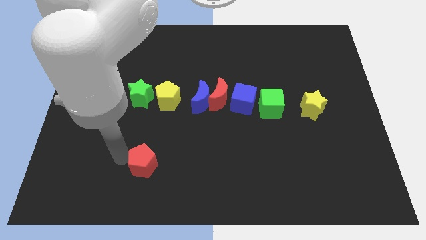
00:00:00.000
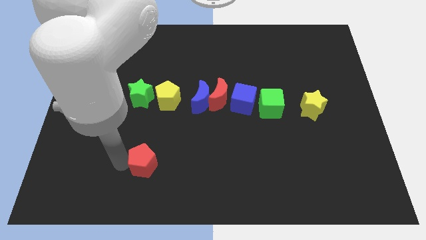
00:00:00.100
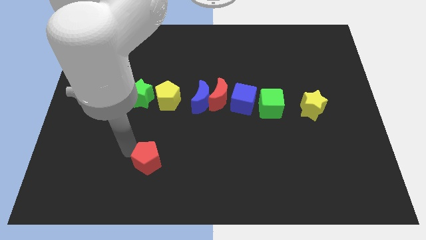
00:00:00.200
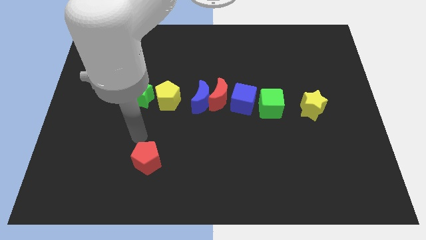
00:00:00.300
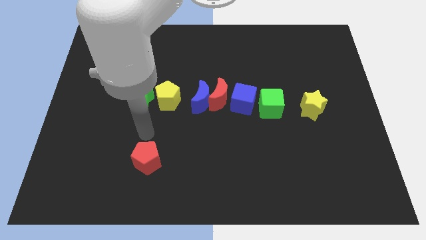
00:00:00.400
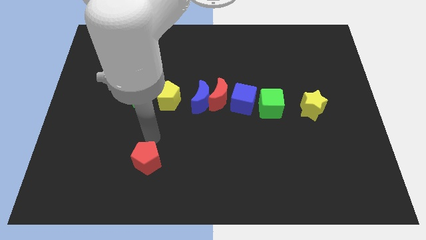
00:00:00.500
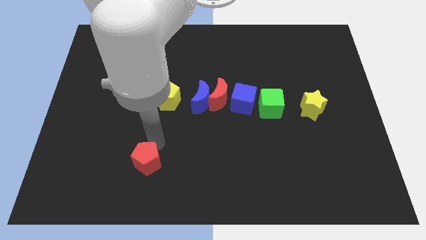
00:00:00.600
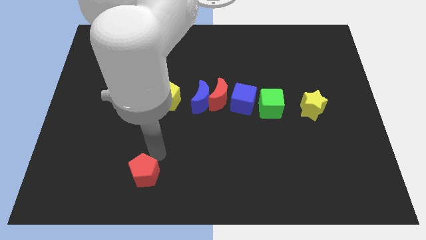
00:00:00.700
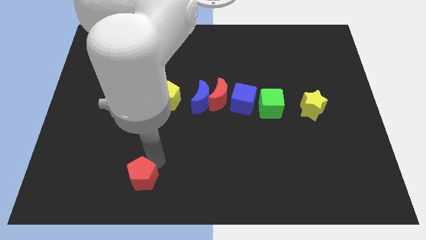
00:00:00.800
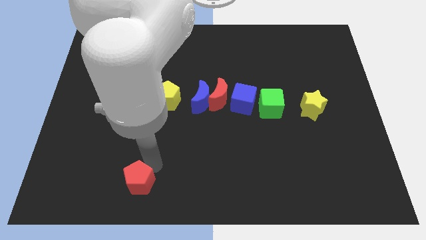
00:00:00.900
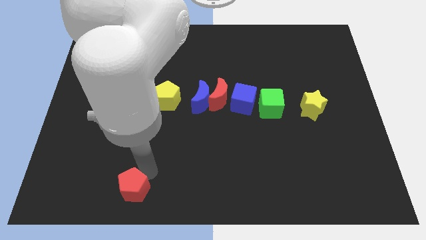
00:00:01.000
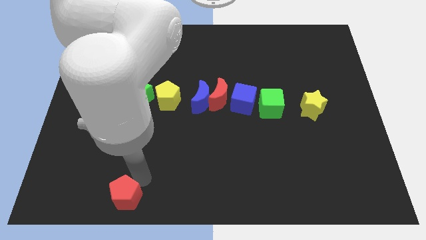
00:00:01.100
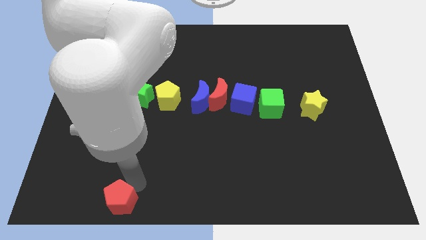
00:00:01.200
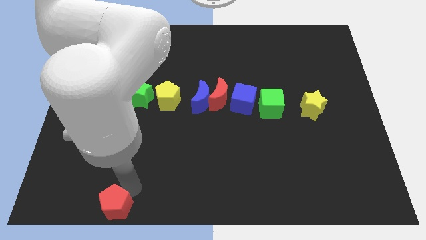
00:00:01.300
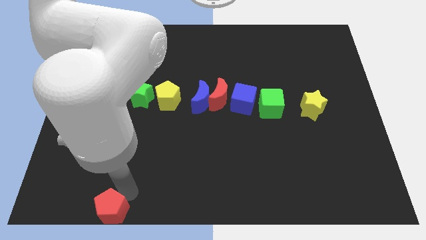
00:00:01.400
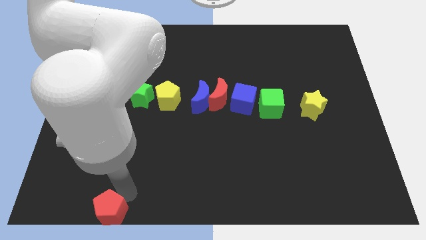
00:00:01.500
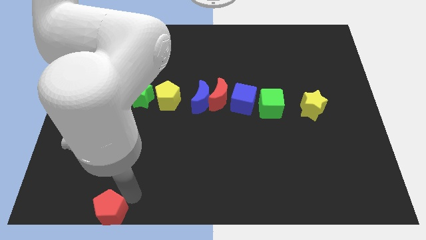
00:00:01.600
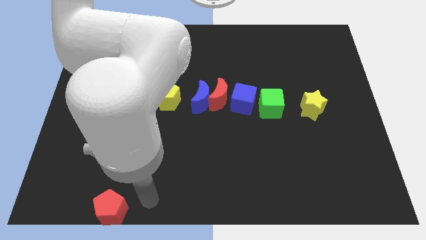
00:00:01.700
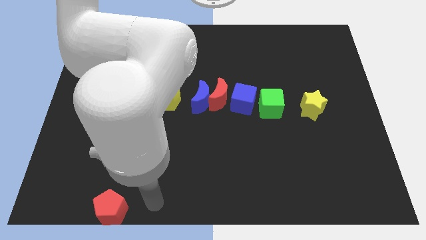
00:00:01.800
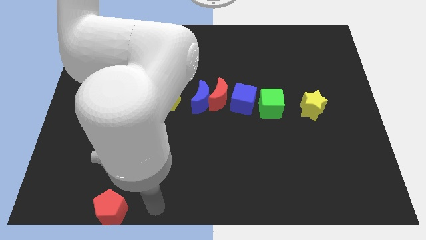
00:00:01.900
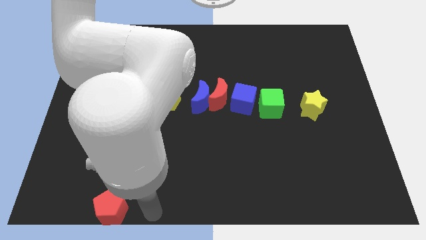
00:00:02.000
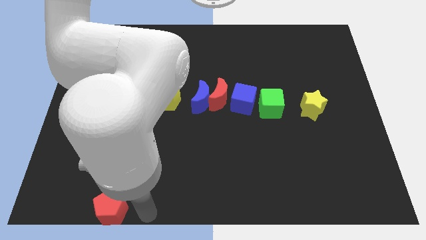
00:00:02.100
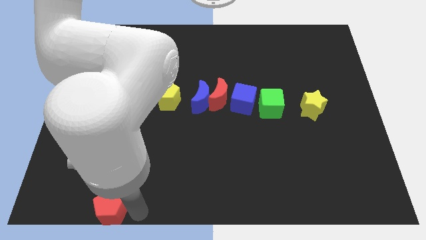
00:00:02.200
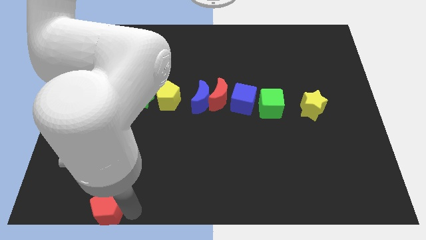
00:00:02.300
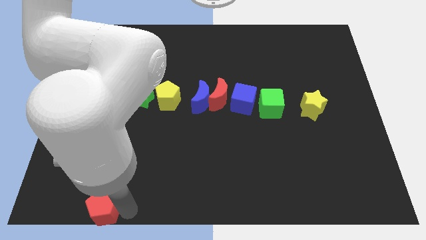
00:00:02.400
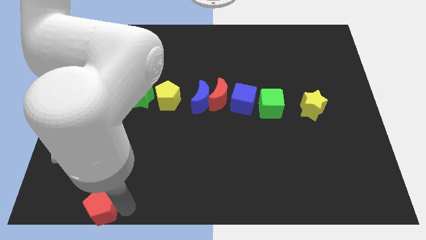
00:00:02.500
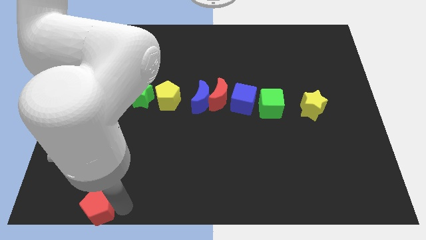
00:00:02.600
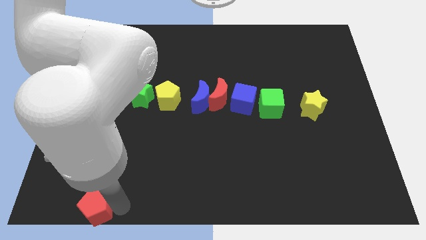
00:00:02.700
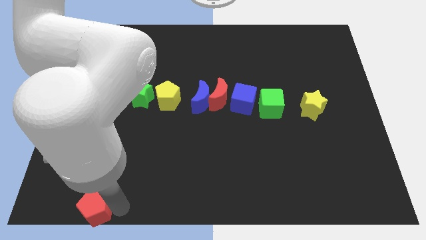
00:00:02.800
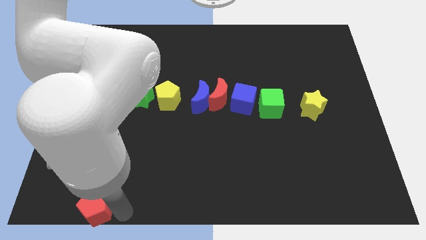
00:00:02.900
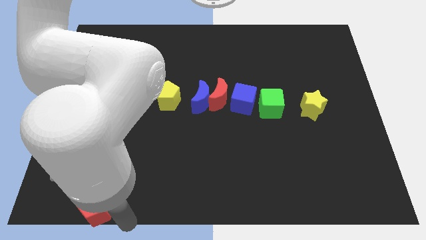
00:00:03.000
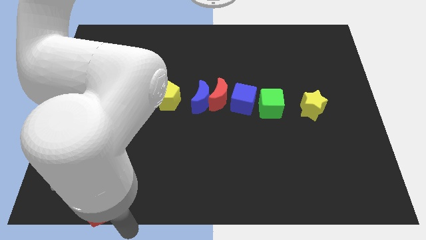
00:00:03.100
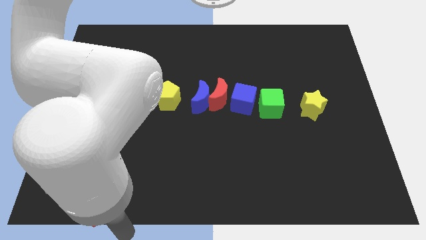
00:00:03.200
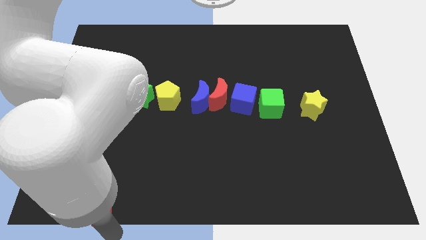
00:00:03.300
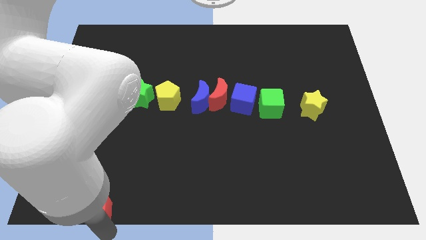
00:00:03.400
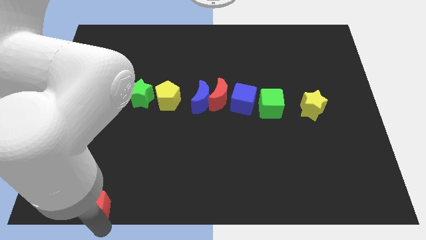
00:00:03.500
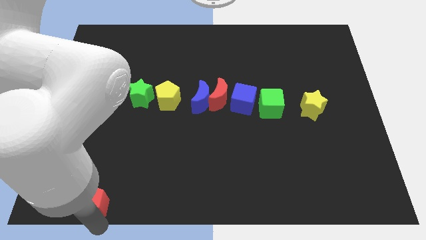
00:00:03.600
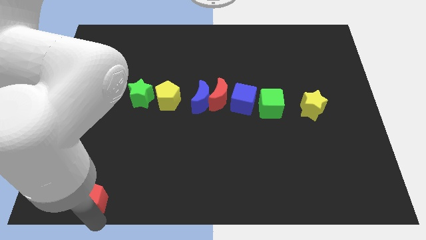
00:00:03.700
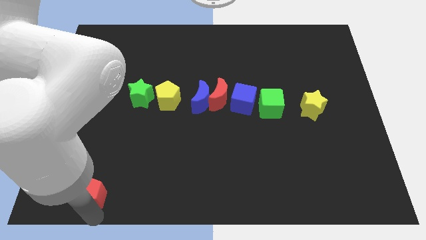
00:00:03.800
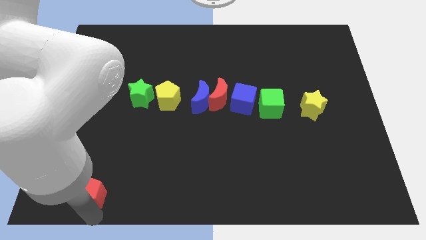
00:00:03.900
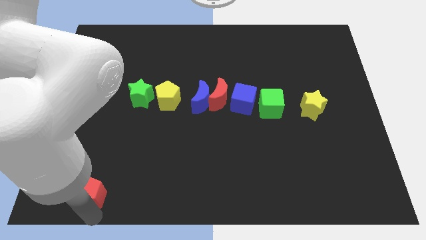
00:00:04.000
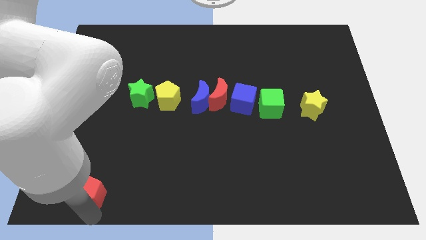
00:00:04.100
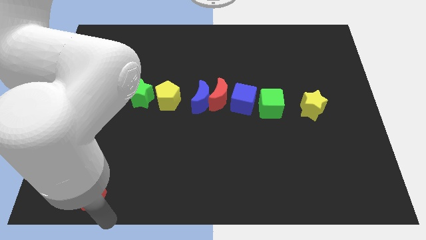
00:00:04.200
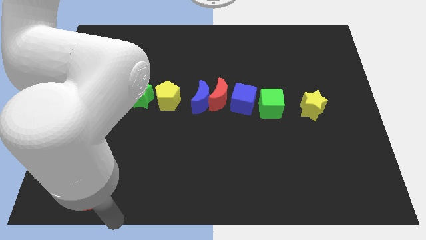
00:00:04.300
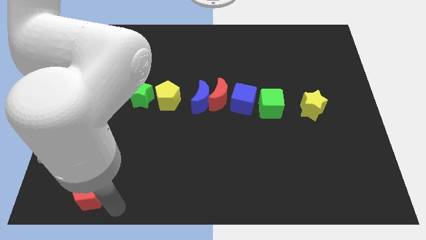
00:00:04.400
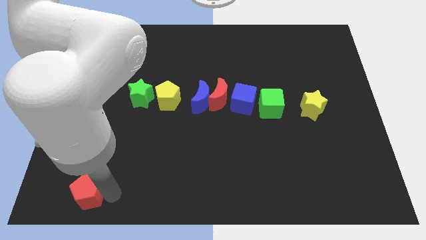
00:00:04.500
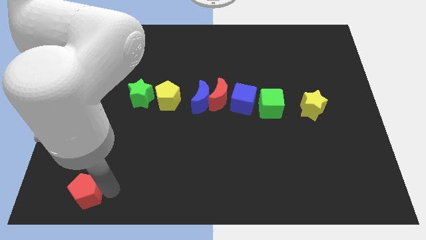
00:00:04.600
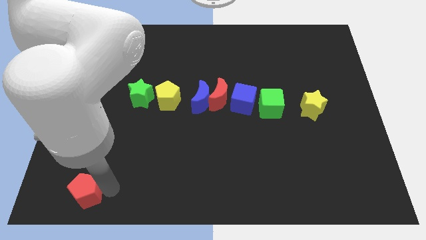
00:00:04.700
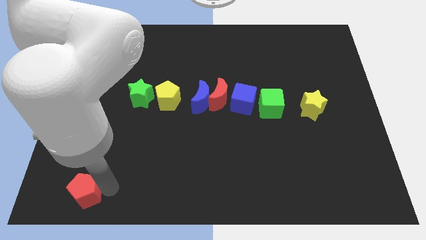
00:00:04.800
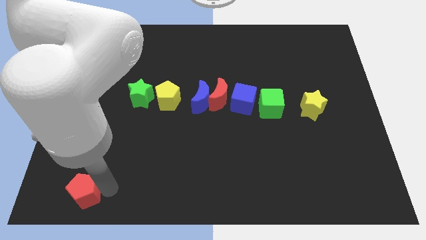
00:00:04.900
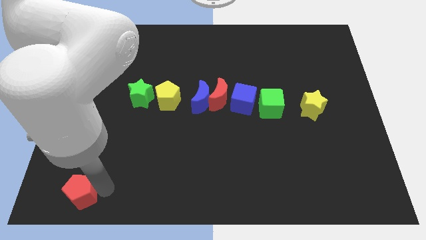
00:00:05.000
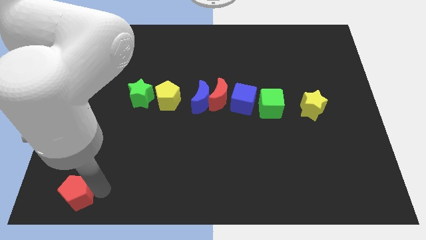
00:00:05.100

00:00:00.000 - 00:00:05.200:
move the red pentagon to the bottom left side

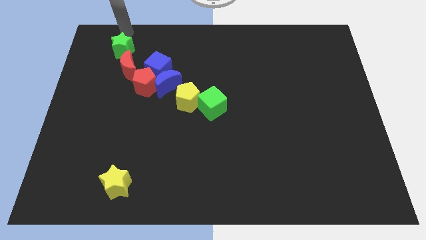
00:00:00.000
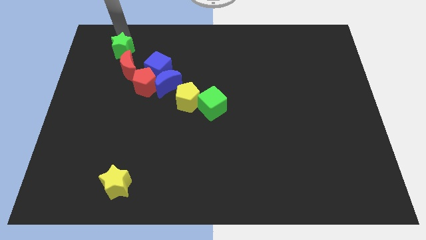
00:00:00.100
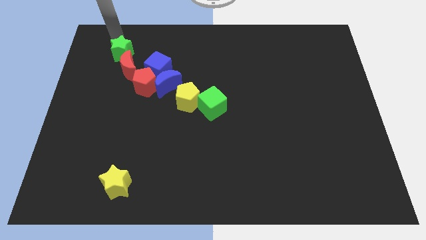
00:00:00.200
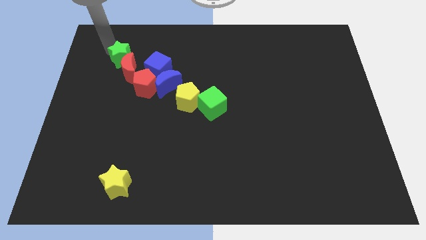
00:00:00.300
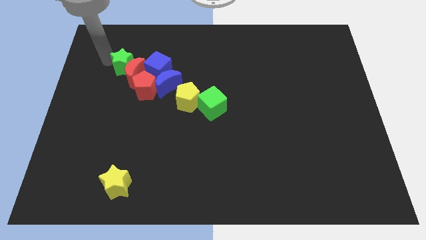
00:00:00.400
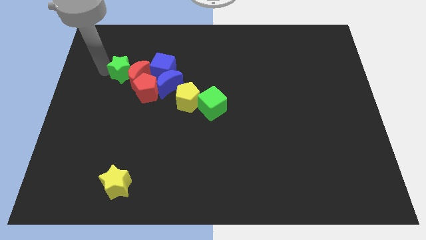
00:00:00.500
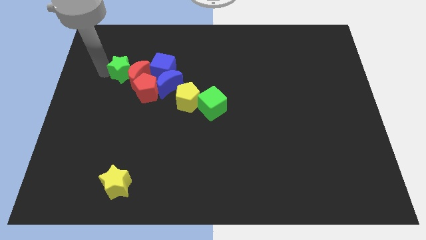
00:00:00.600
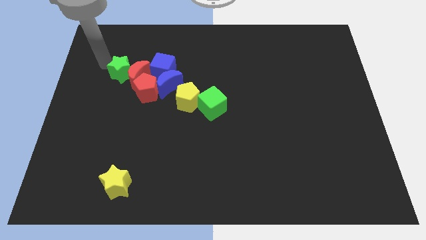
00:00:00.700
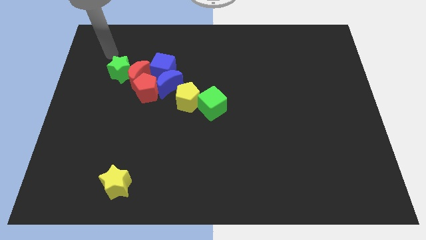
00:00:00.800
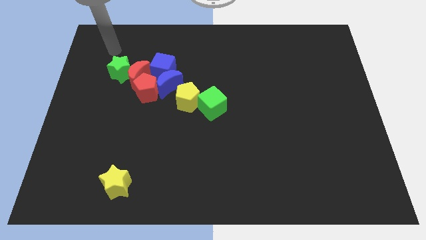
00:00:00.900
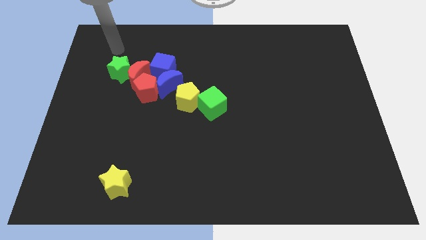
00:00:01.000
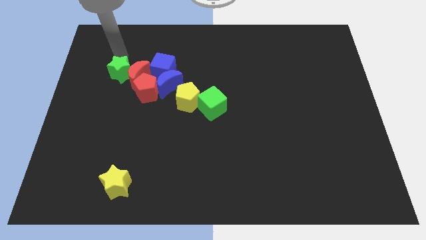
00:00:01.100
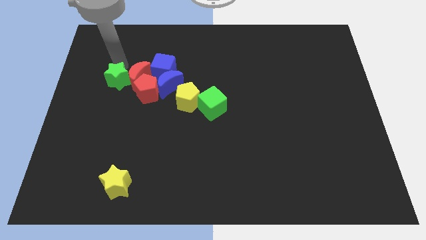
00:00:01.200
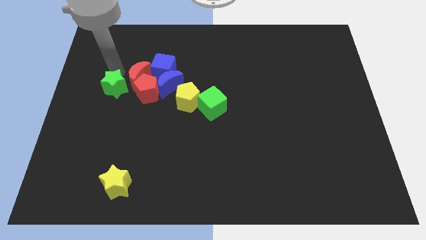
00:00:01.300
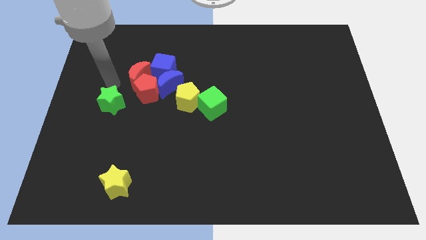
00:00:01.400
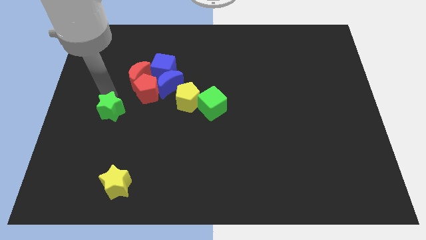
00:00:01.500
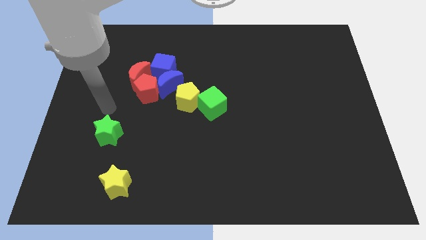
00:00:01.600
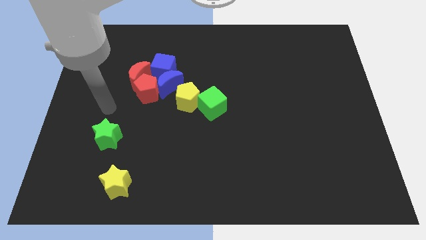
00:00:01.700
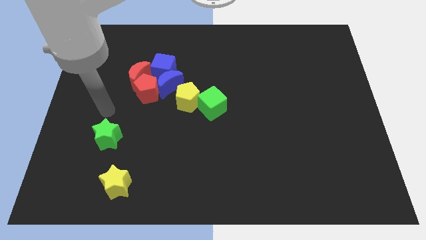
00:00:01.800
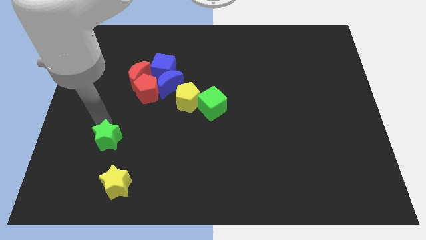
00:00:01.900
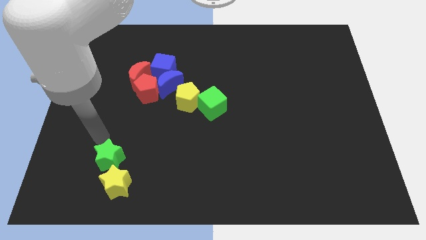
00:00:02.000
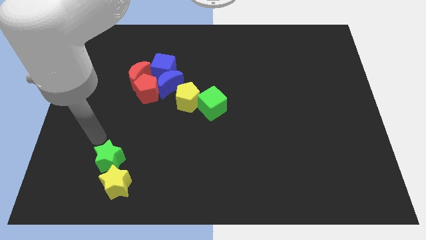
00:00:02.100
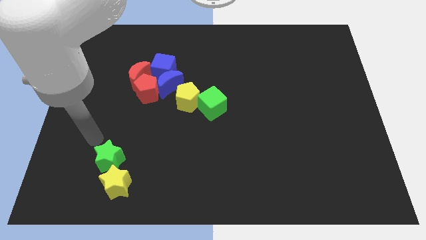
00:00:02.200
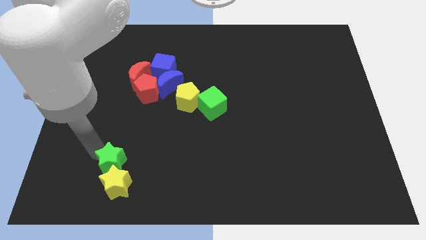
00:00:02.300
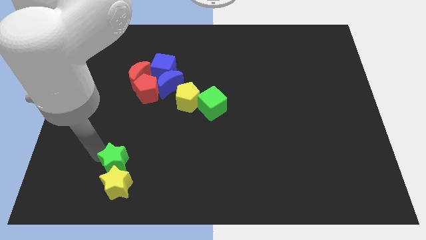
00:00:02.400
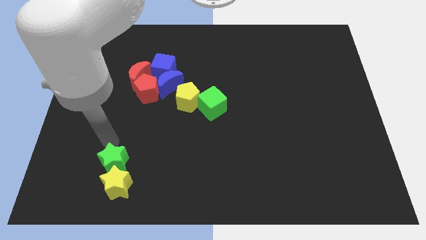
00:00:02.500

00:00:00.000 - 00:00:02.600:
push the green star to the top of the yellow star

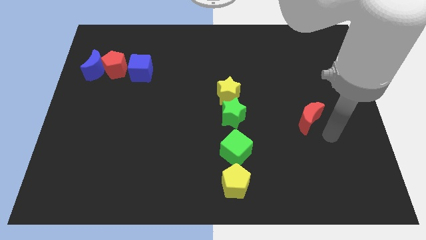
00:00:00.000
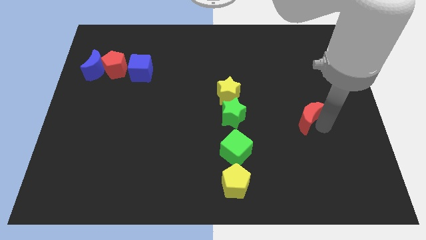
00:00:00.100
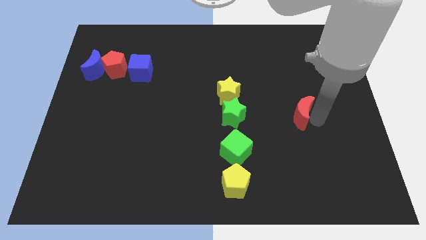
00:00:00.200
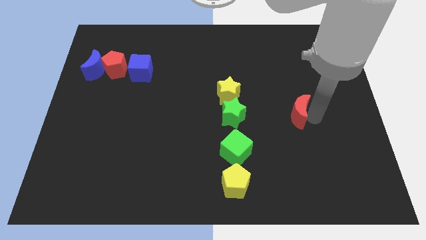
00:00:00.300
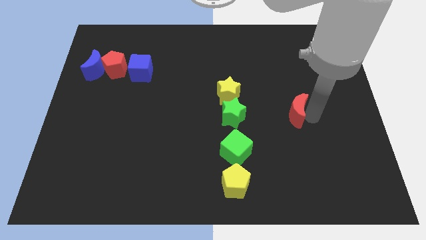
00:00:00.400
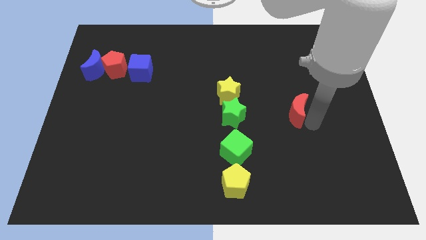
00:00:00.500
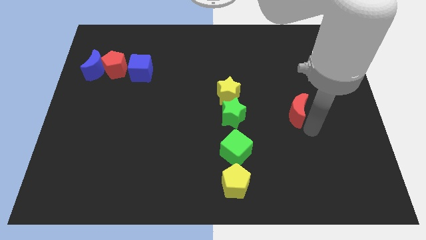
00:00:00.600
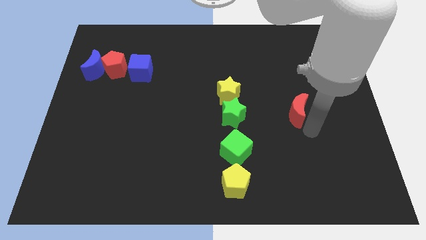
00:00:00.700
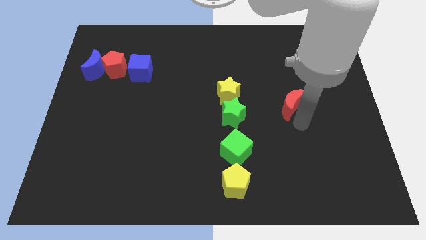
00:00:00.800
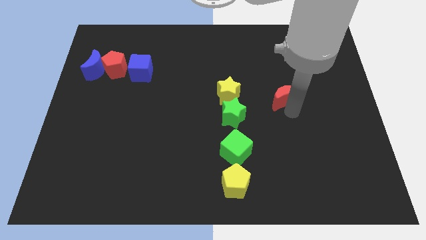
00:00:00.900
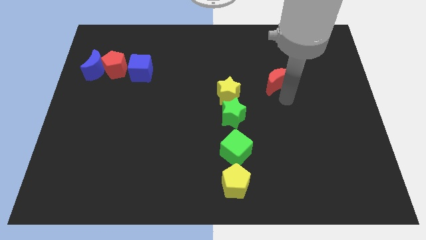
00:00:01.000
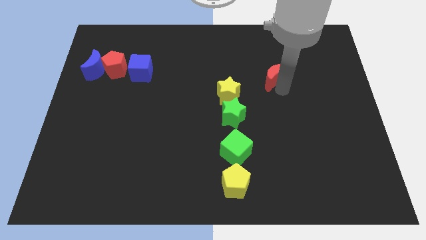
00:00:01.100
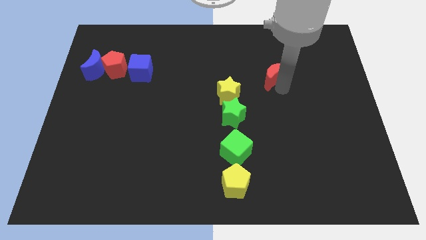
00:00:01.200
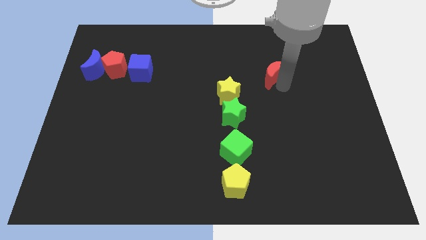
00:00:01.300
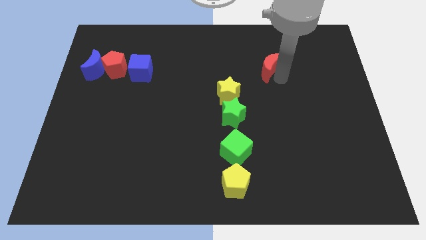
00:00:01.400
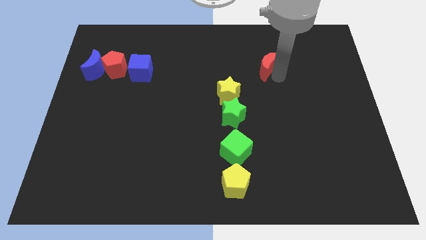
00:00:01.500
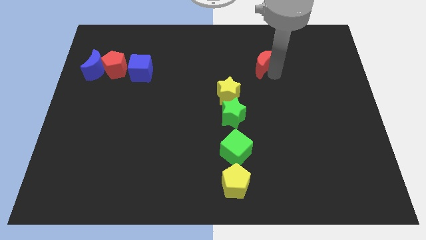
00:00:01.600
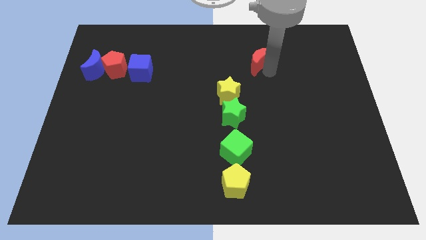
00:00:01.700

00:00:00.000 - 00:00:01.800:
move the red moon diagonally to the top right of the yellow star
